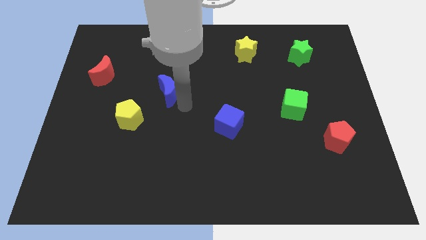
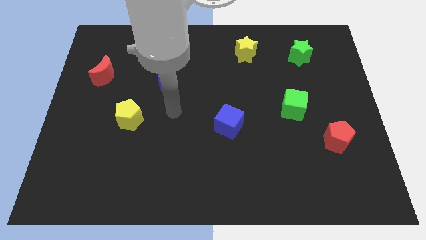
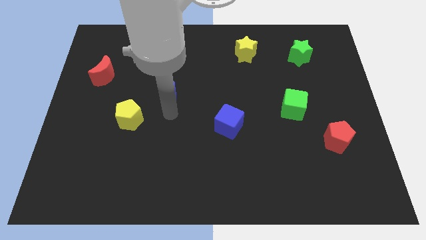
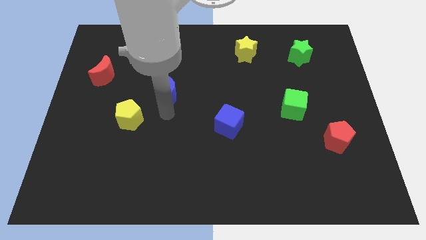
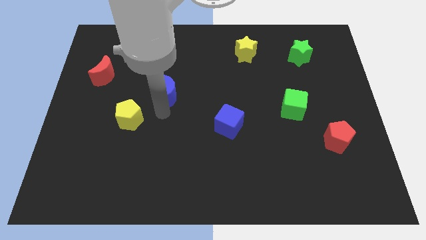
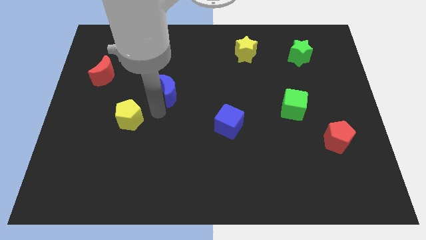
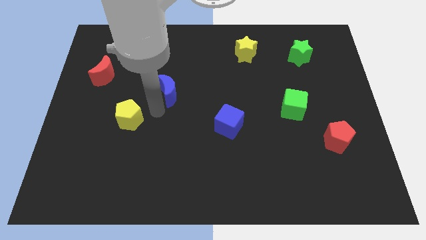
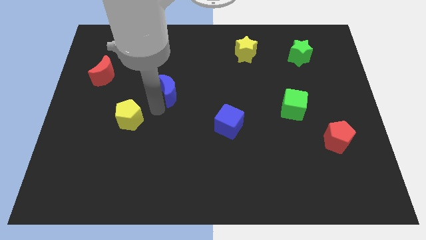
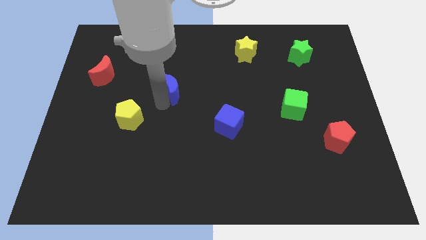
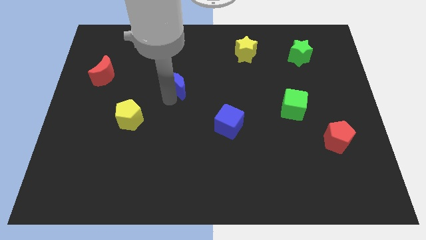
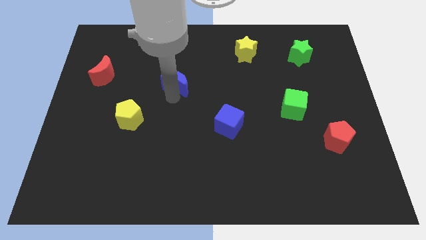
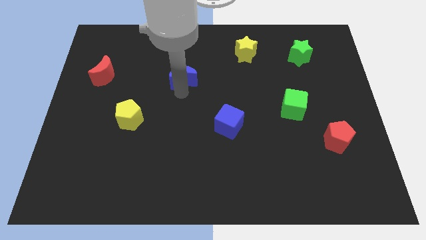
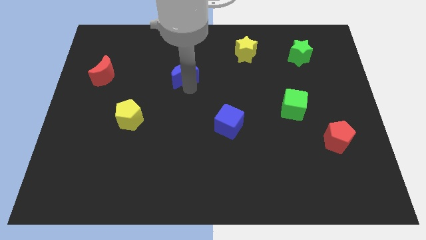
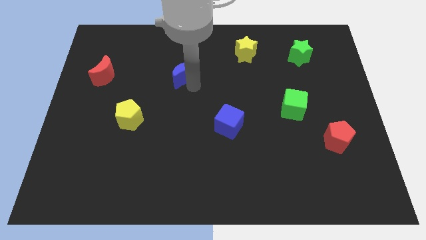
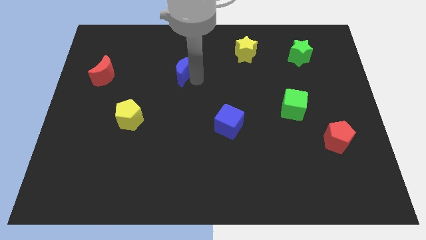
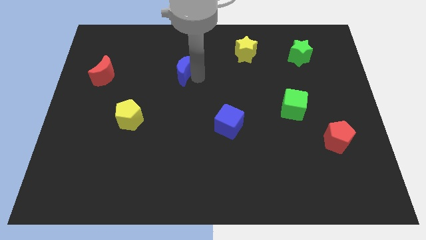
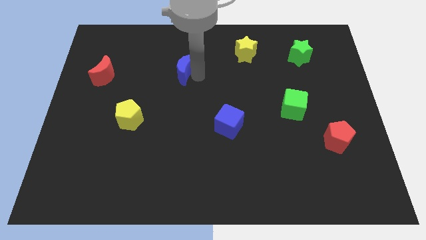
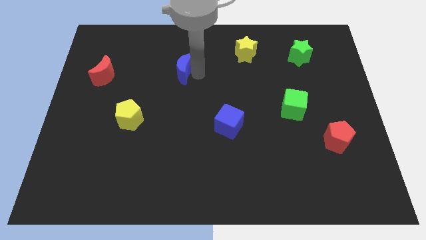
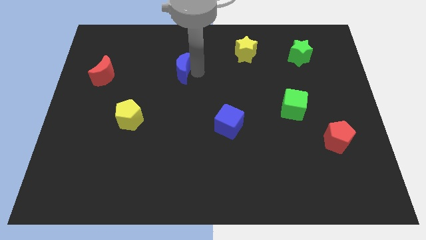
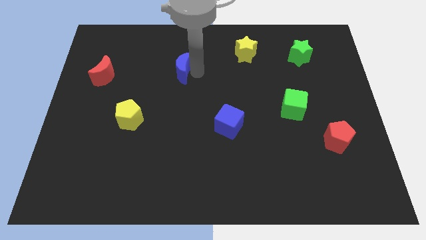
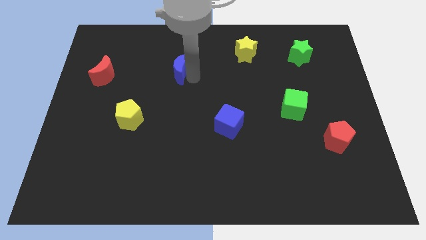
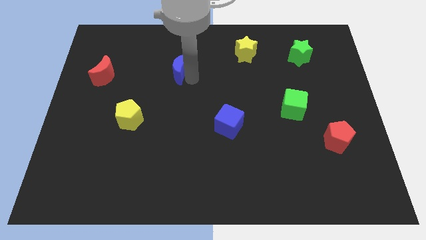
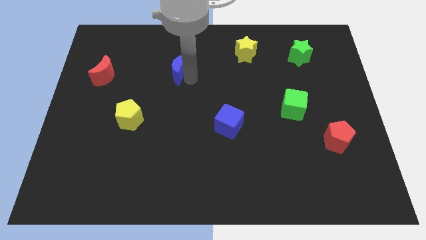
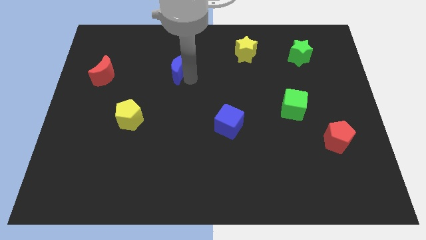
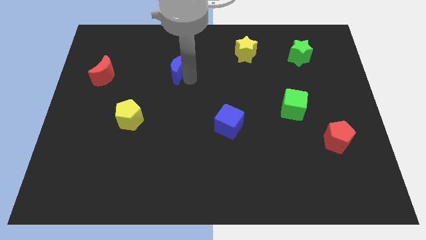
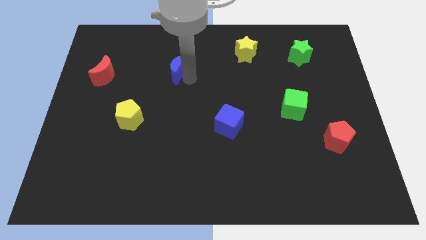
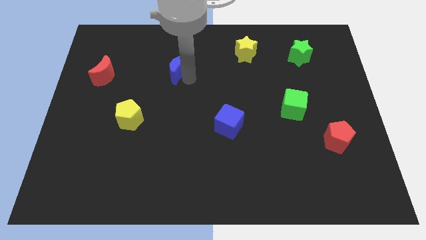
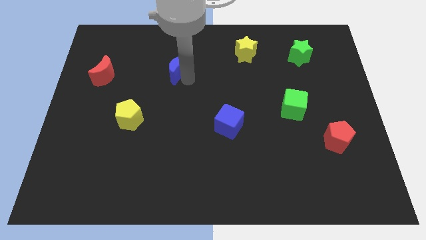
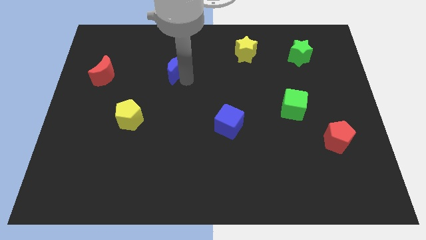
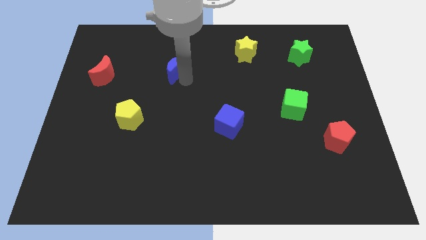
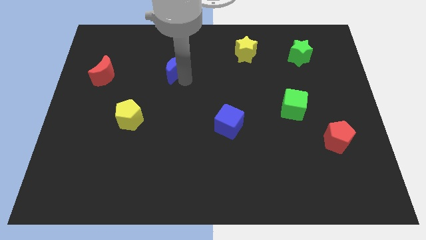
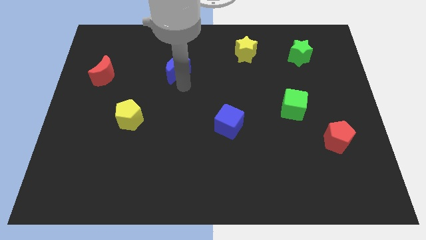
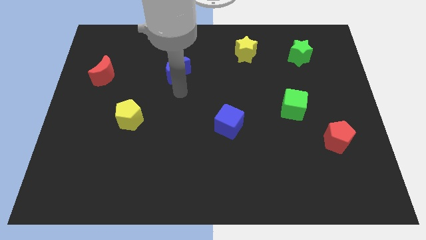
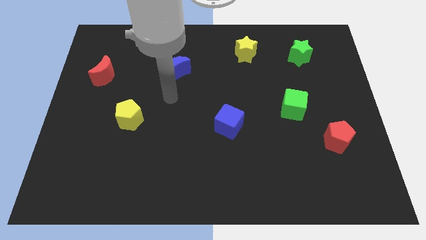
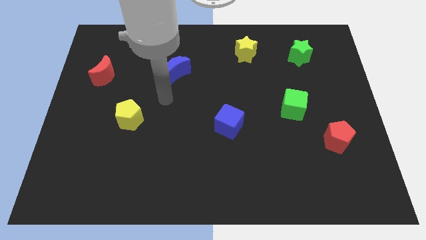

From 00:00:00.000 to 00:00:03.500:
make a triangle by placing blue moon upwards slightly

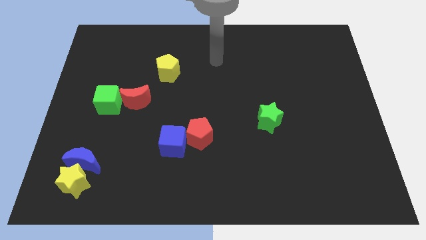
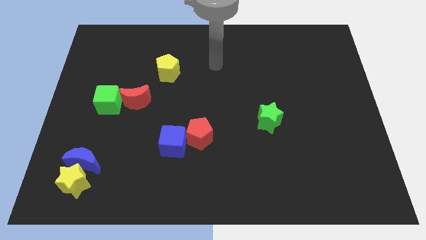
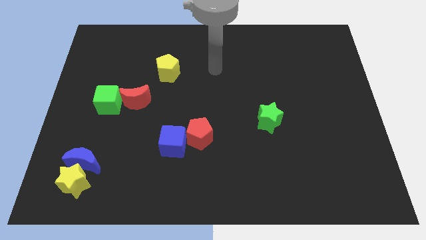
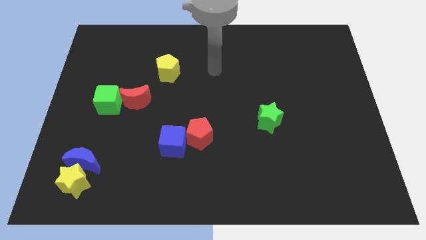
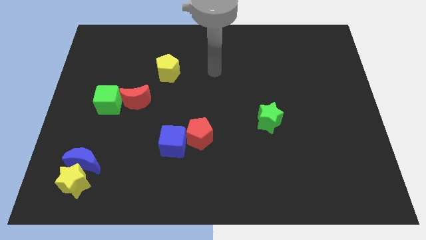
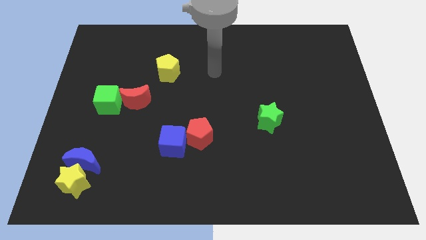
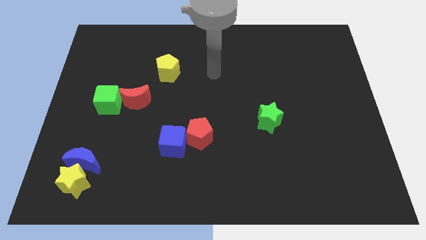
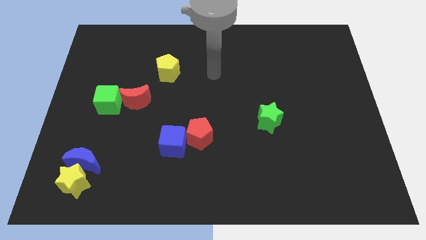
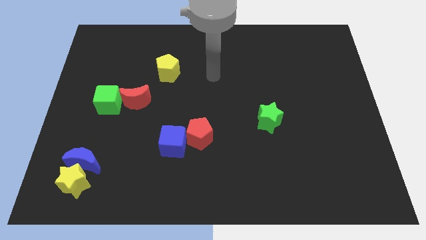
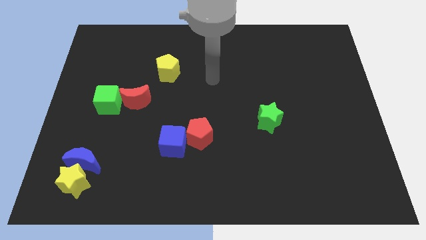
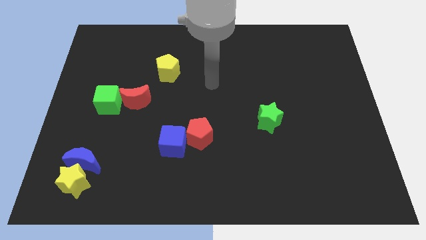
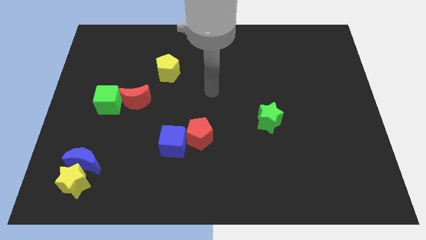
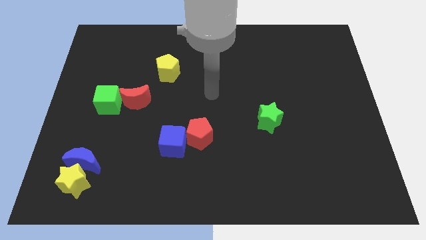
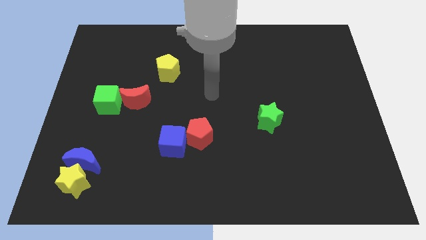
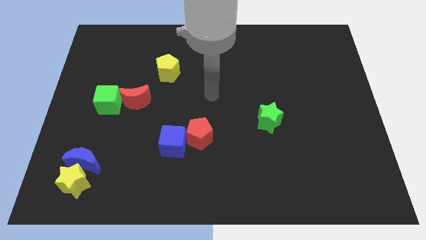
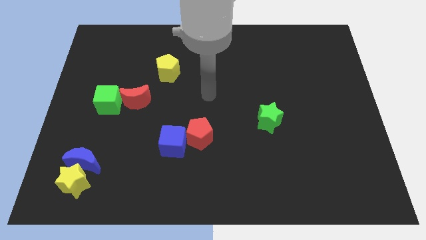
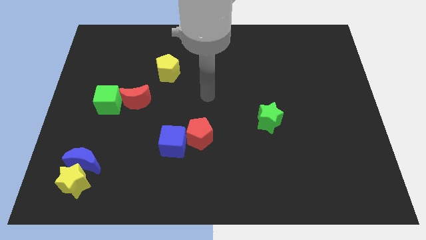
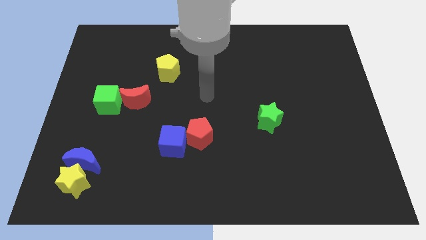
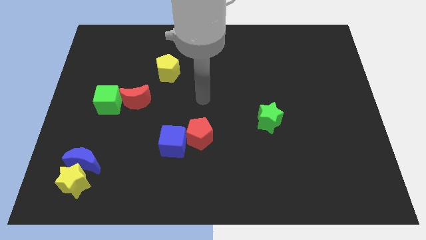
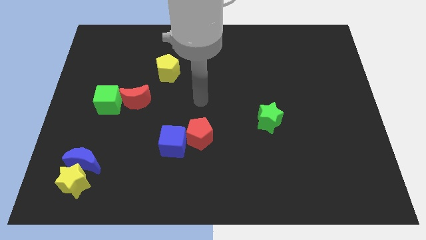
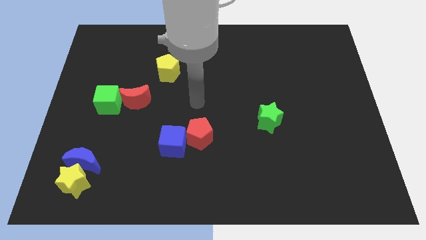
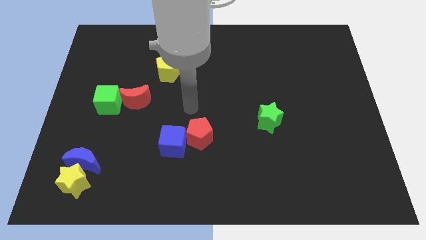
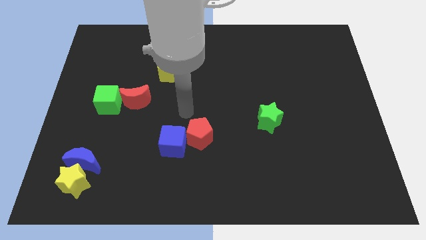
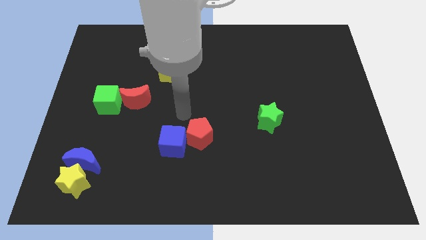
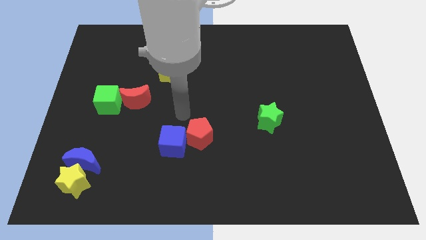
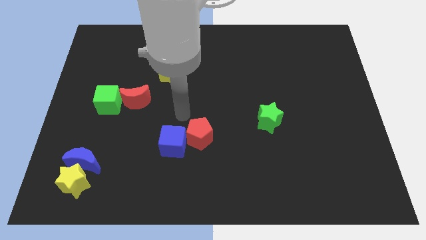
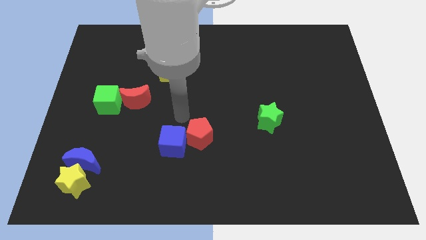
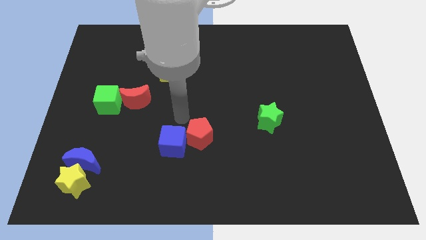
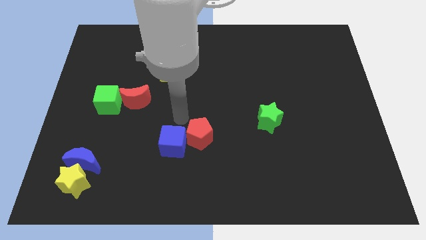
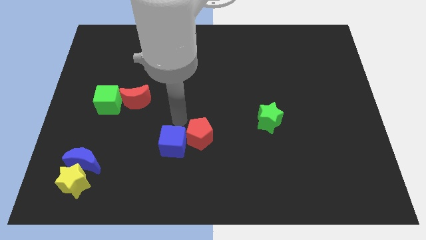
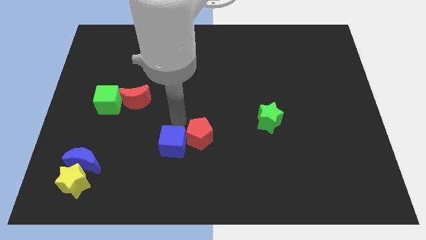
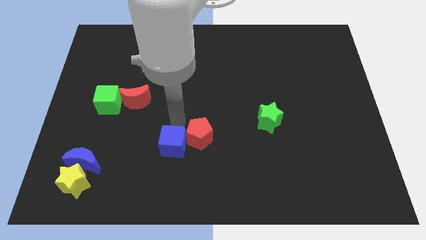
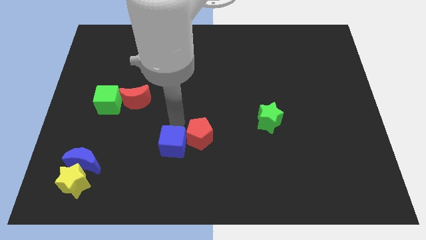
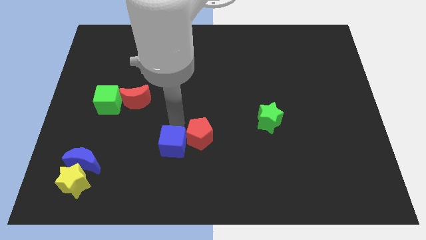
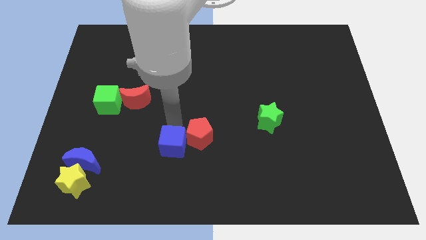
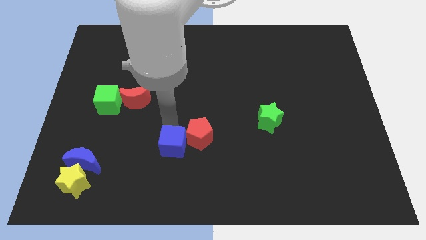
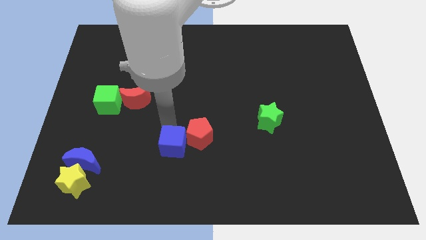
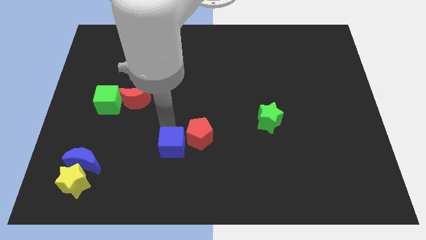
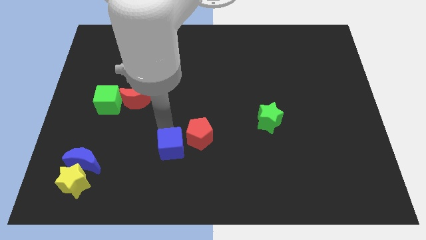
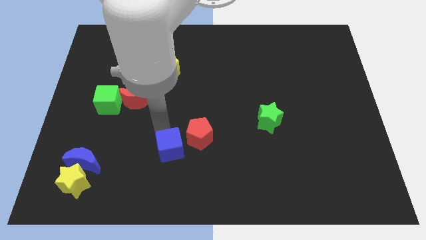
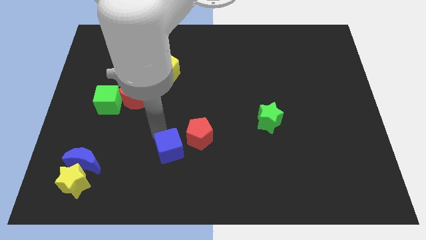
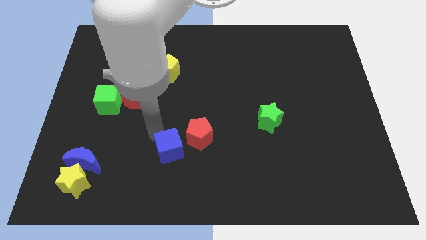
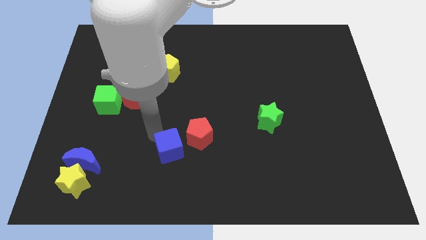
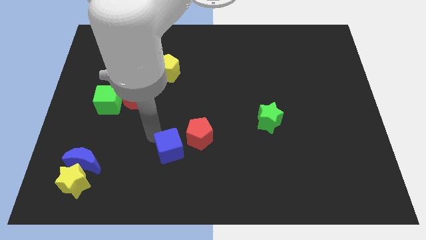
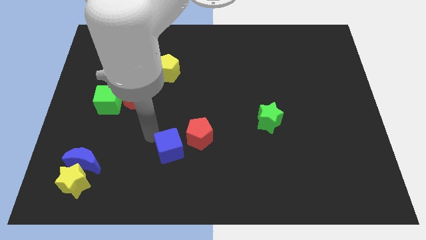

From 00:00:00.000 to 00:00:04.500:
move the blue cube slightly to the bottom

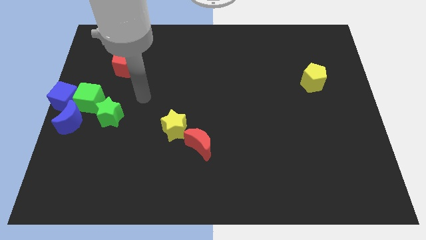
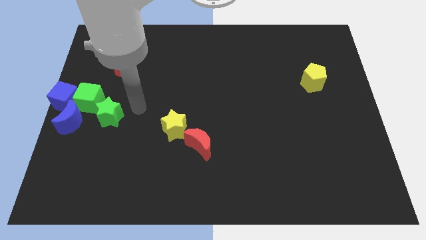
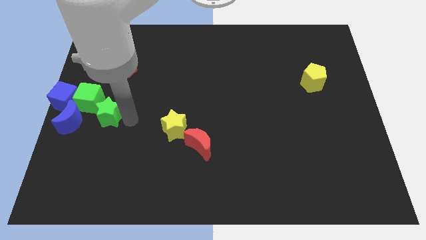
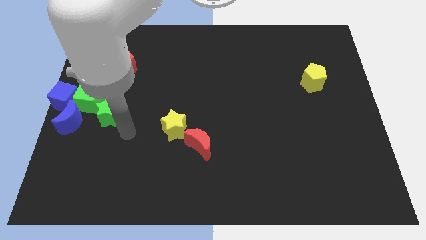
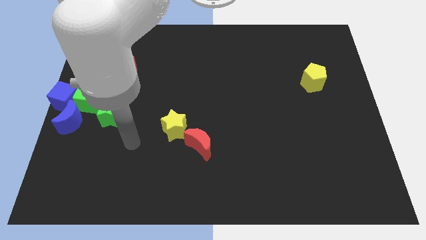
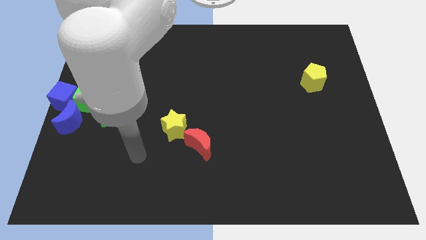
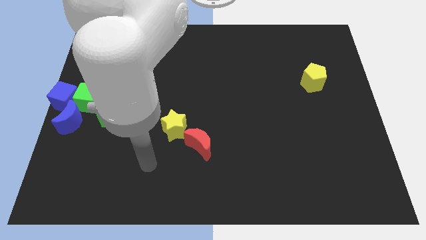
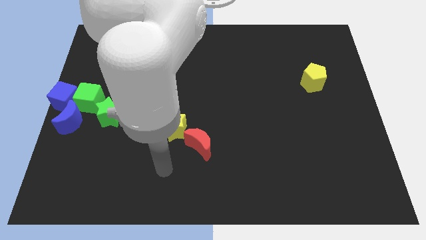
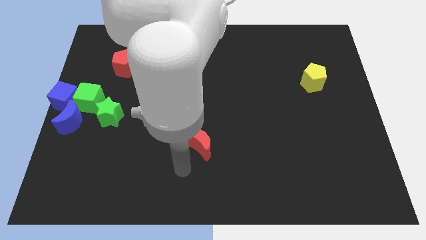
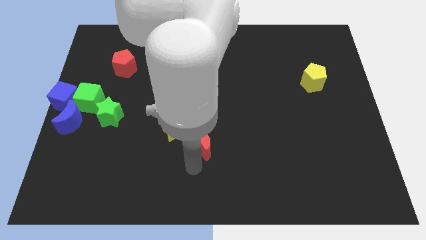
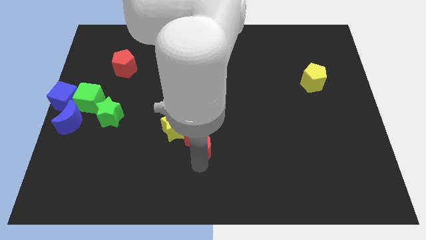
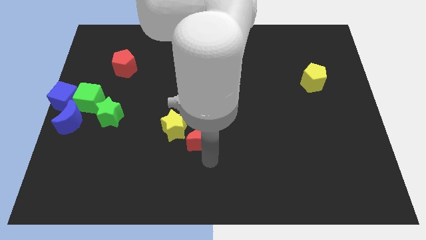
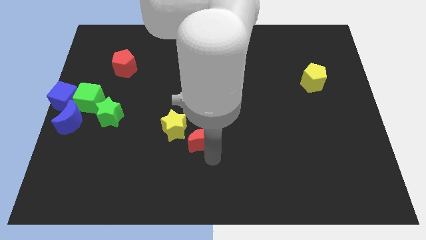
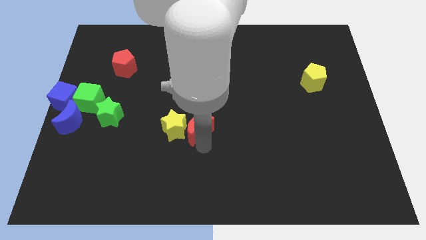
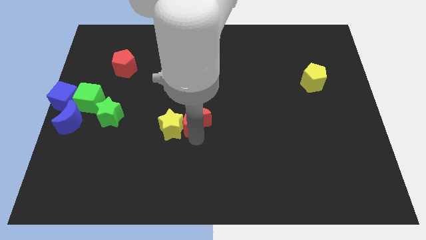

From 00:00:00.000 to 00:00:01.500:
push the red moon to the right side of the yellow star
